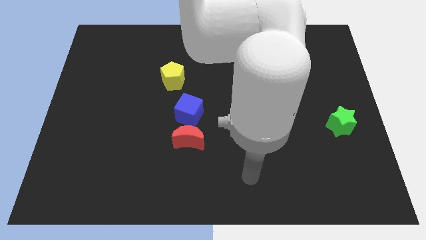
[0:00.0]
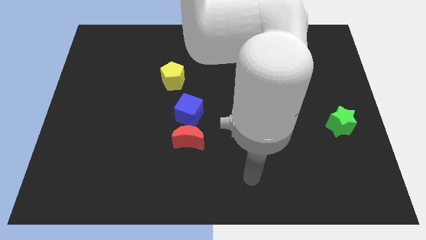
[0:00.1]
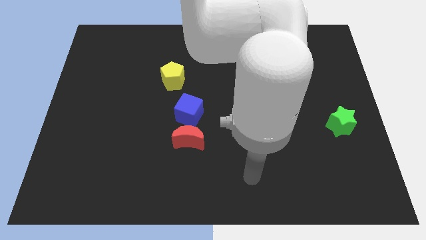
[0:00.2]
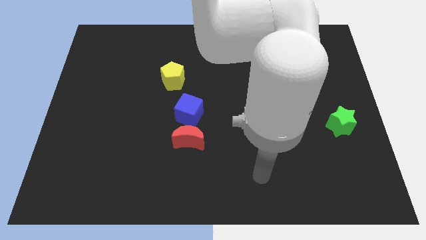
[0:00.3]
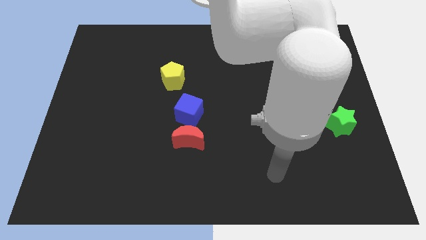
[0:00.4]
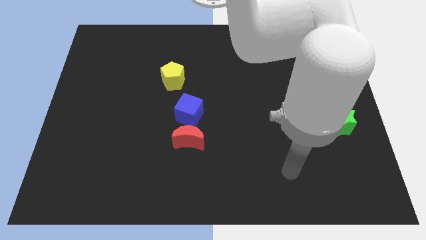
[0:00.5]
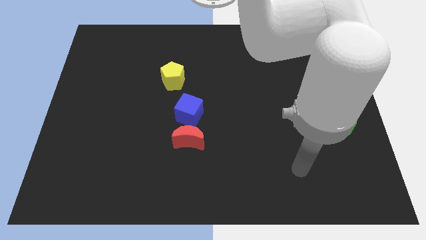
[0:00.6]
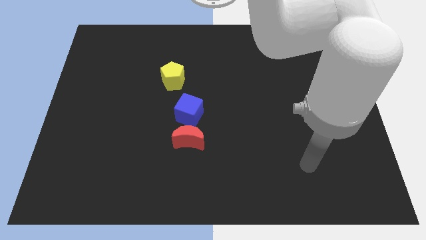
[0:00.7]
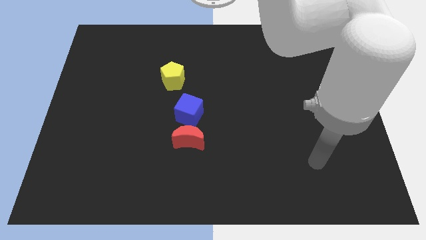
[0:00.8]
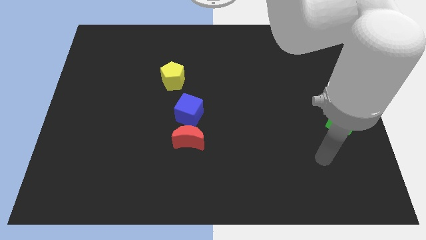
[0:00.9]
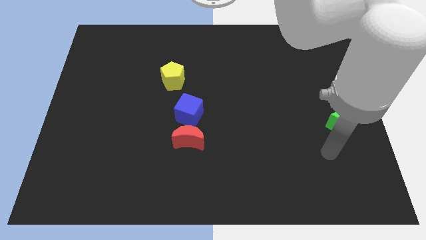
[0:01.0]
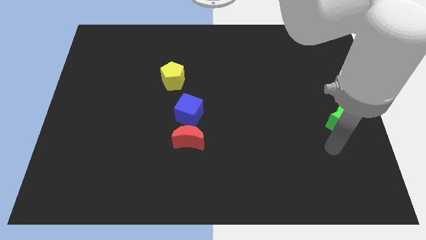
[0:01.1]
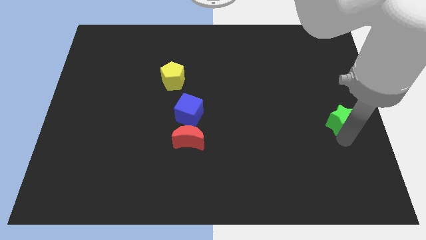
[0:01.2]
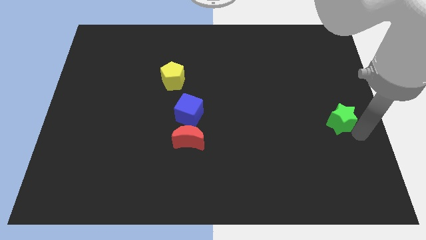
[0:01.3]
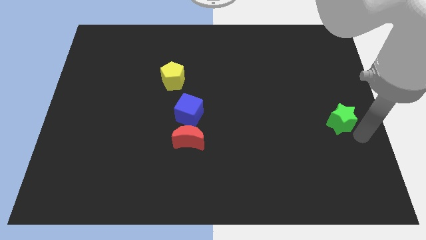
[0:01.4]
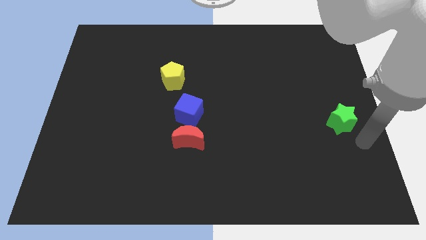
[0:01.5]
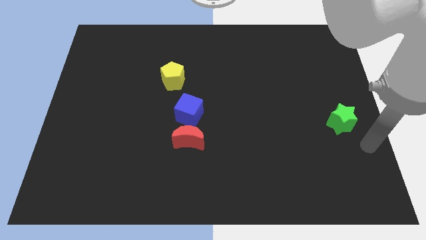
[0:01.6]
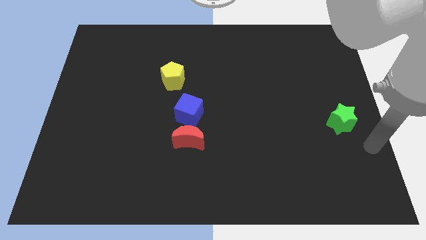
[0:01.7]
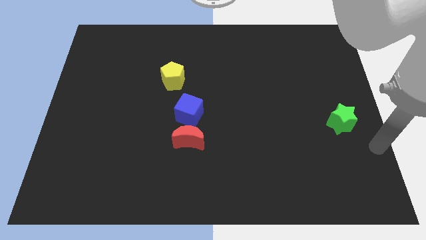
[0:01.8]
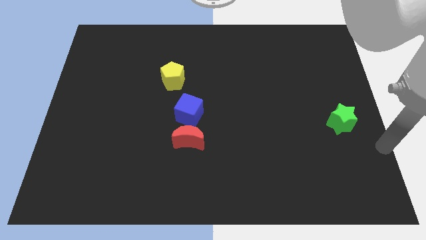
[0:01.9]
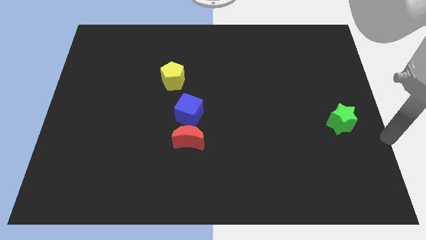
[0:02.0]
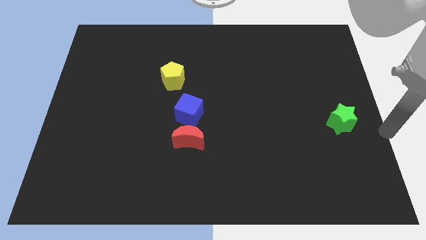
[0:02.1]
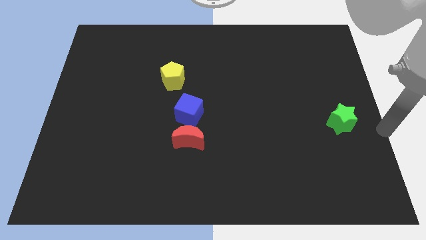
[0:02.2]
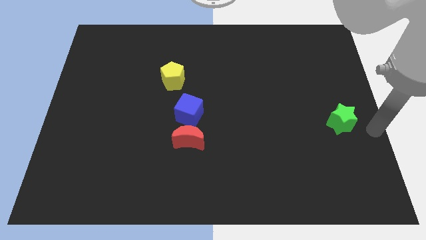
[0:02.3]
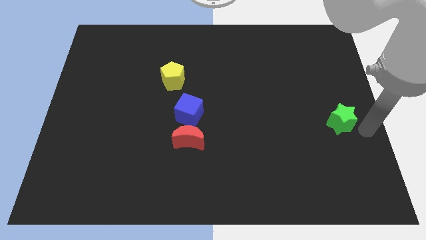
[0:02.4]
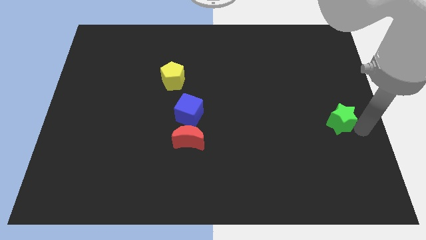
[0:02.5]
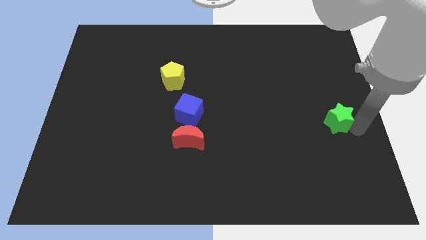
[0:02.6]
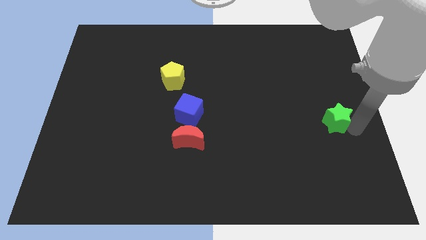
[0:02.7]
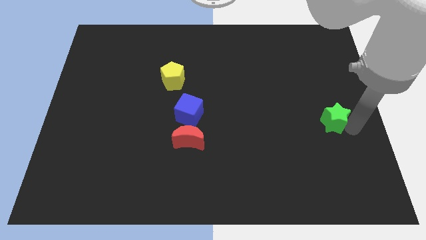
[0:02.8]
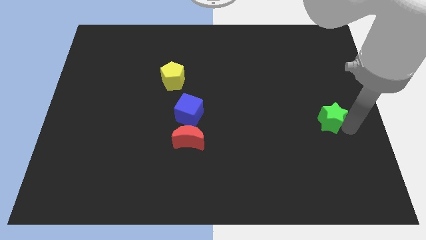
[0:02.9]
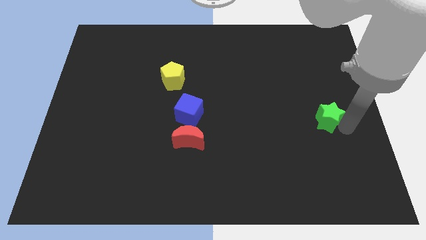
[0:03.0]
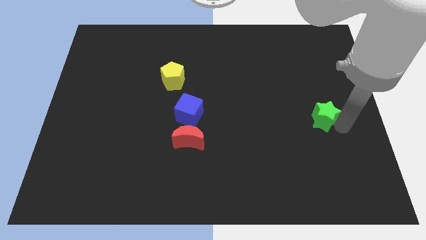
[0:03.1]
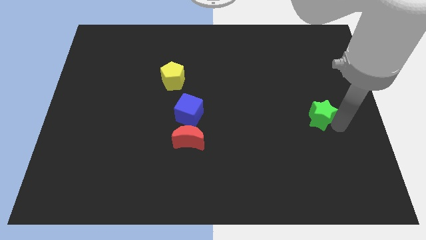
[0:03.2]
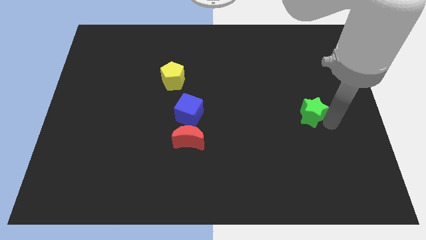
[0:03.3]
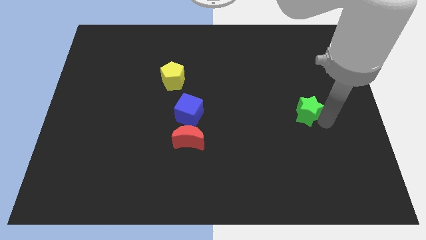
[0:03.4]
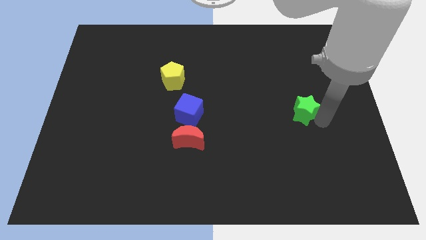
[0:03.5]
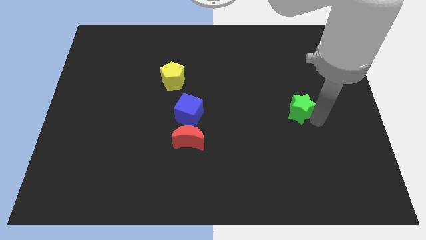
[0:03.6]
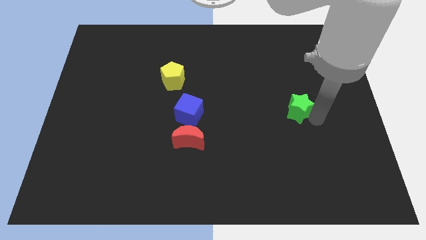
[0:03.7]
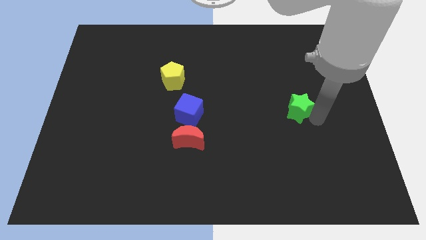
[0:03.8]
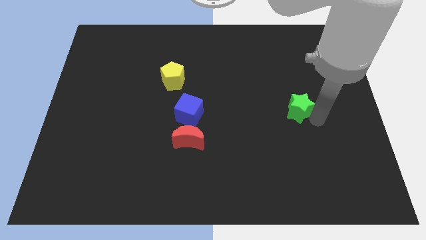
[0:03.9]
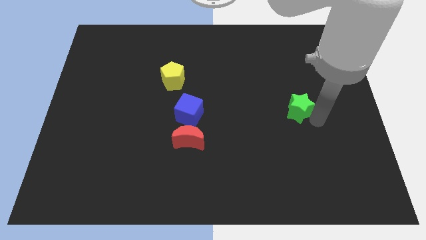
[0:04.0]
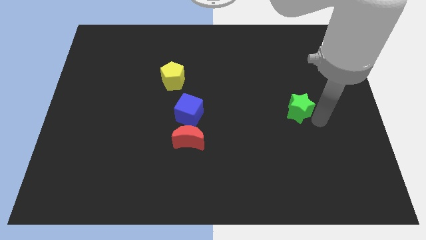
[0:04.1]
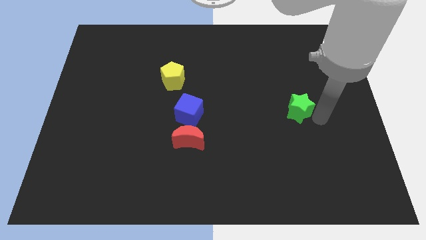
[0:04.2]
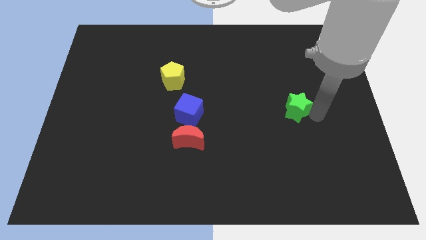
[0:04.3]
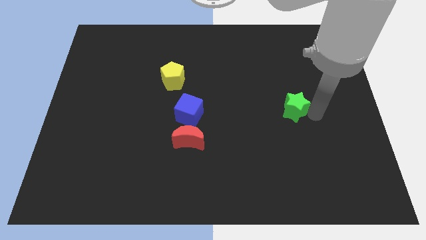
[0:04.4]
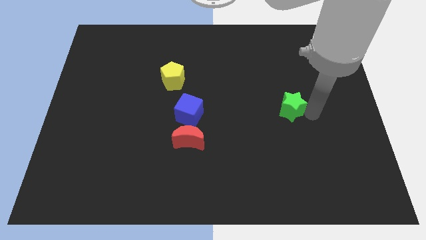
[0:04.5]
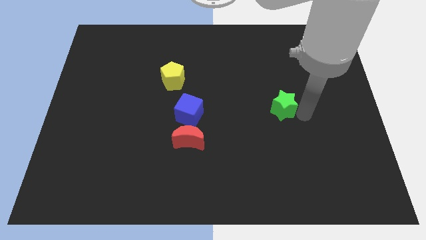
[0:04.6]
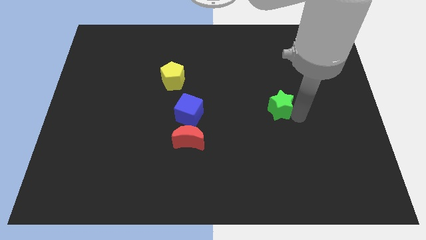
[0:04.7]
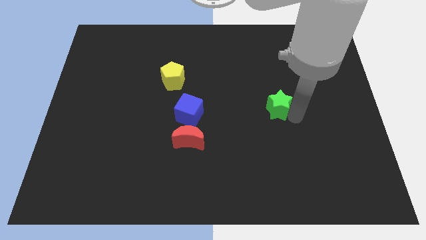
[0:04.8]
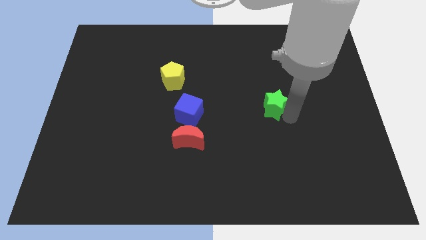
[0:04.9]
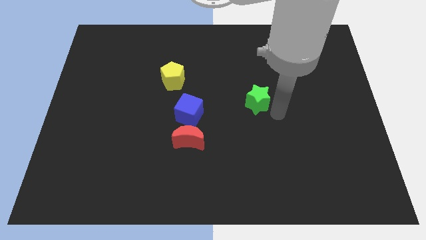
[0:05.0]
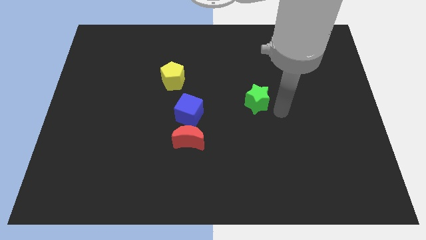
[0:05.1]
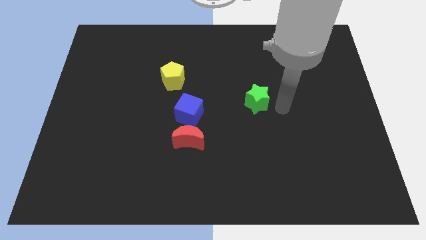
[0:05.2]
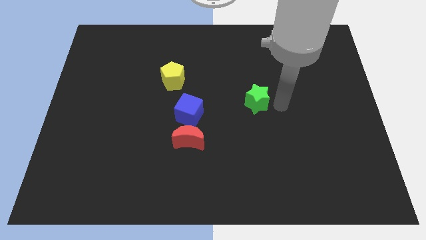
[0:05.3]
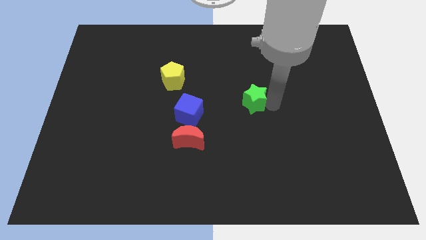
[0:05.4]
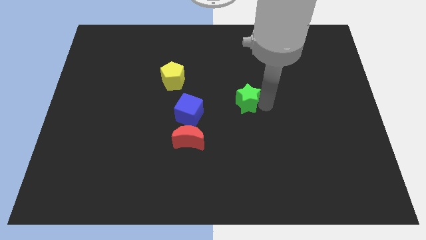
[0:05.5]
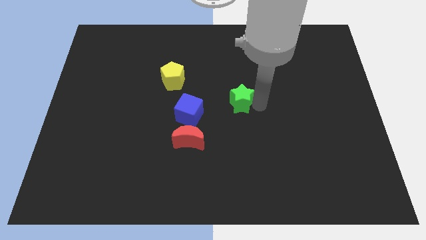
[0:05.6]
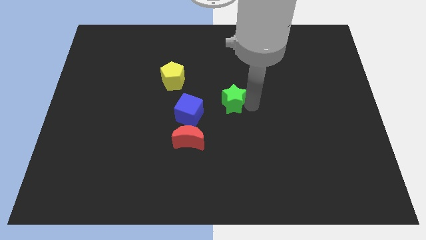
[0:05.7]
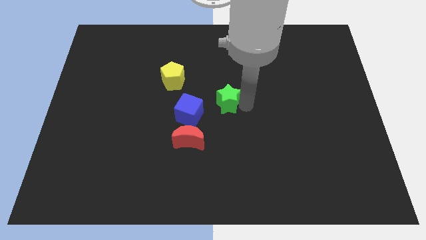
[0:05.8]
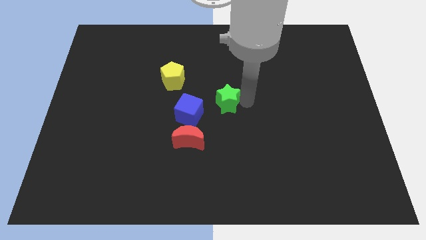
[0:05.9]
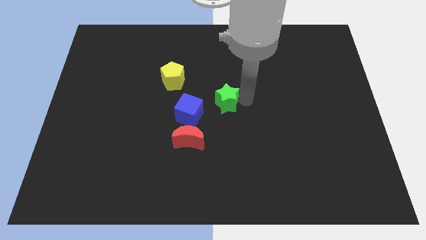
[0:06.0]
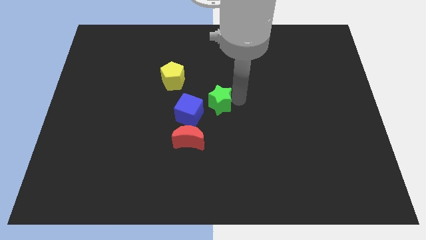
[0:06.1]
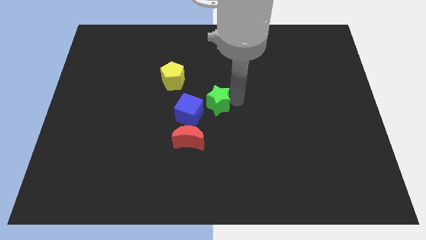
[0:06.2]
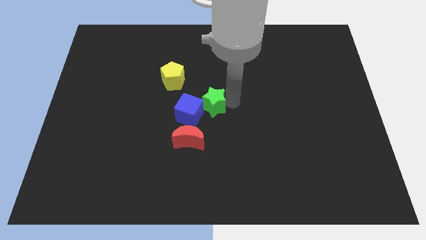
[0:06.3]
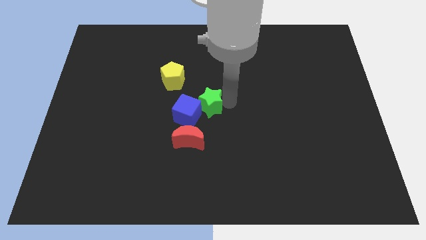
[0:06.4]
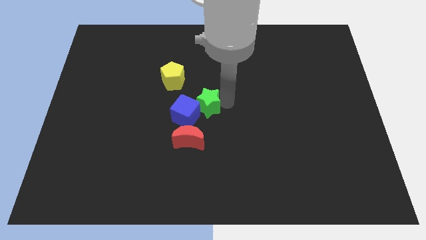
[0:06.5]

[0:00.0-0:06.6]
put the green block close to the blue block

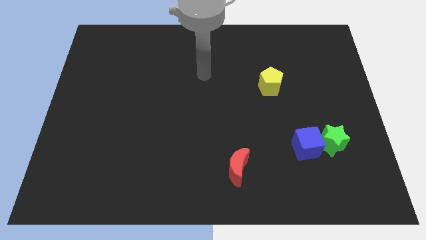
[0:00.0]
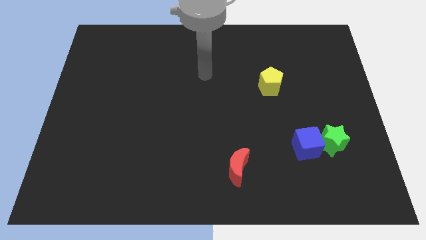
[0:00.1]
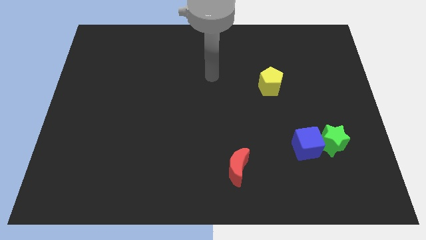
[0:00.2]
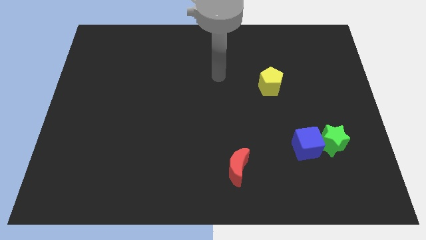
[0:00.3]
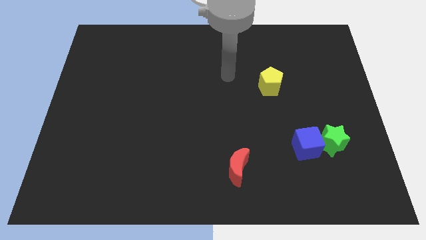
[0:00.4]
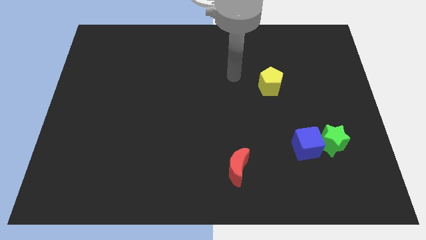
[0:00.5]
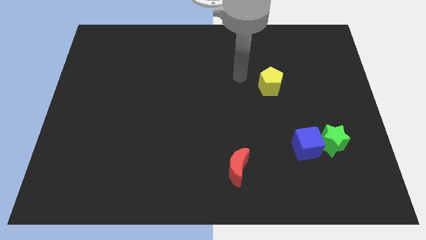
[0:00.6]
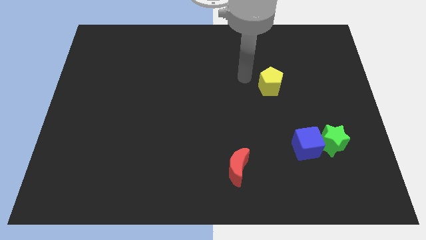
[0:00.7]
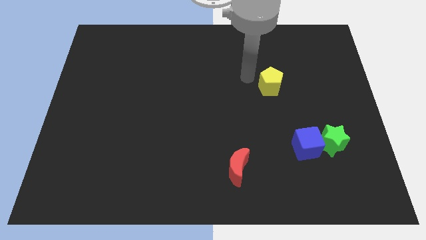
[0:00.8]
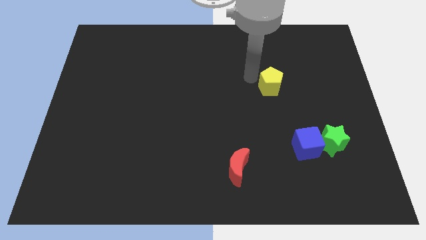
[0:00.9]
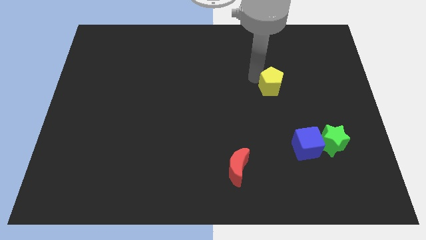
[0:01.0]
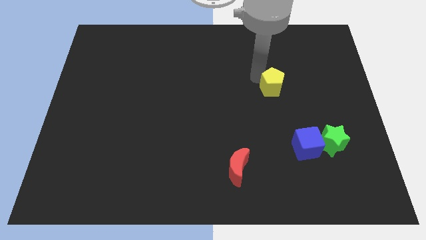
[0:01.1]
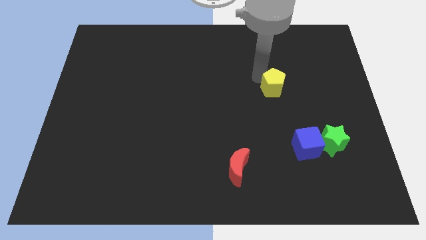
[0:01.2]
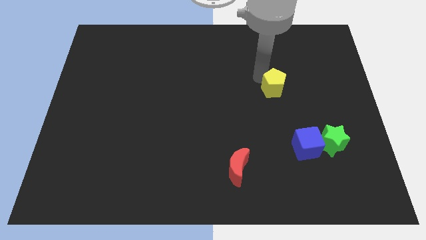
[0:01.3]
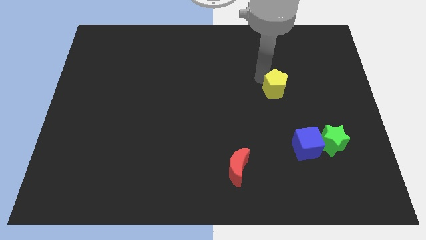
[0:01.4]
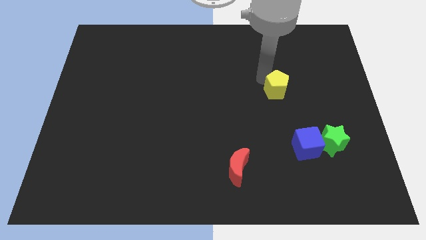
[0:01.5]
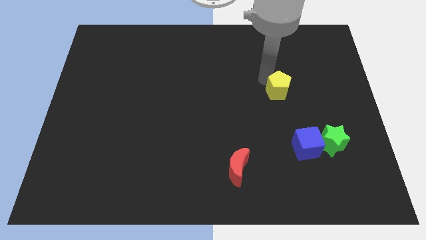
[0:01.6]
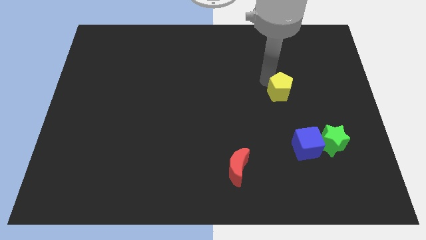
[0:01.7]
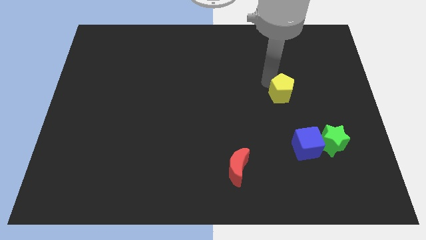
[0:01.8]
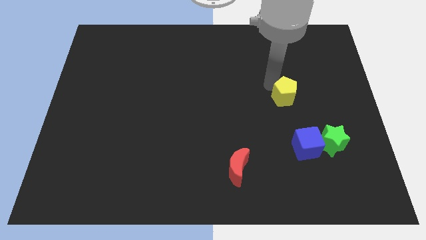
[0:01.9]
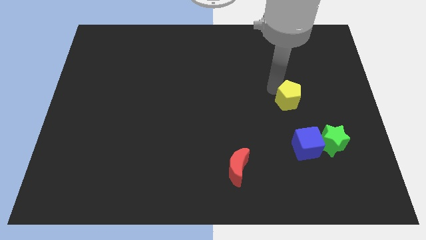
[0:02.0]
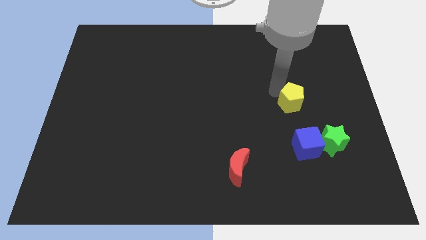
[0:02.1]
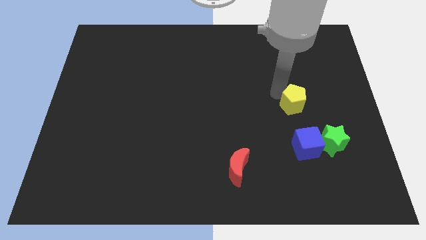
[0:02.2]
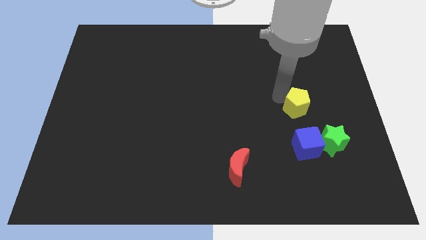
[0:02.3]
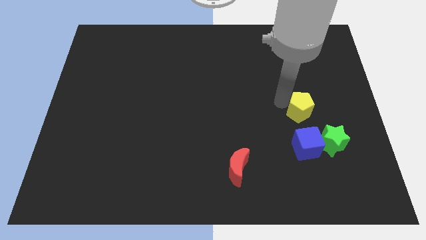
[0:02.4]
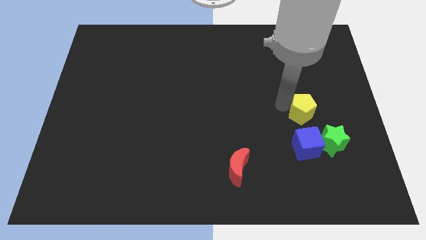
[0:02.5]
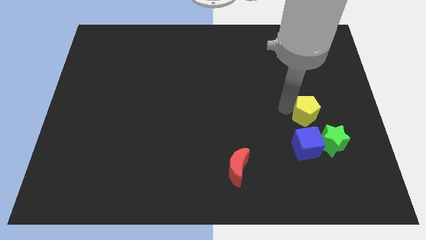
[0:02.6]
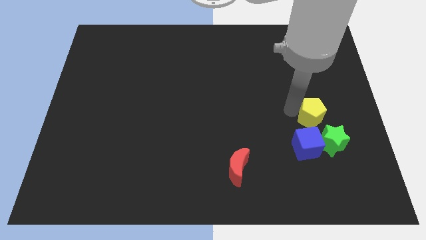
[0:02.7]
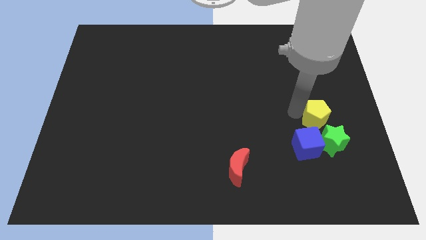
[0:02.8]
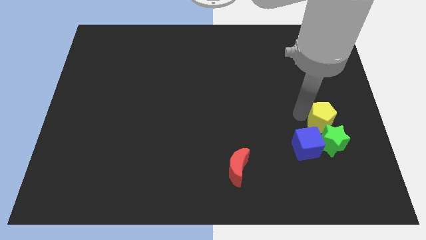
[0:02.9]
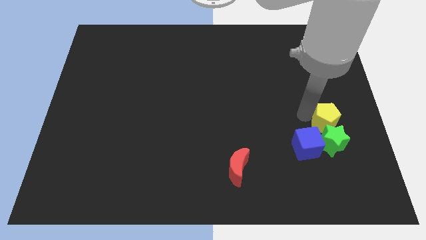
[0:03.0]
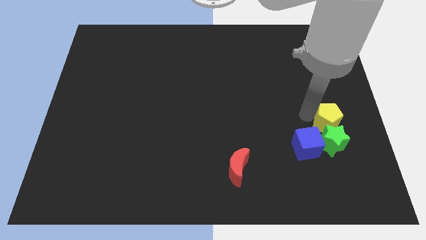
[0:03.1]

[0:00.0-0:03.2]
push the pentagon towards the star
